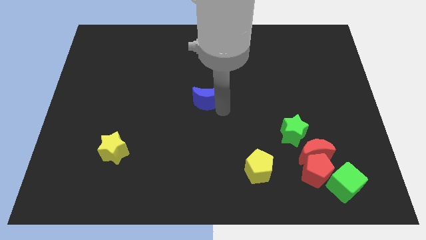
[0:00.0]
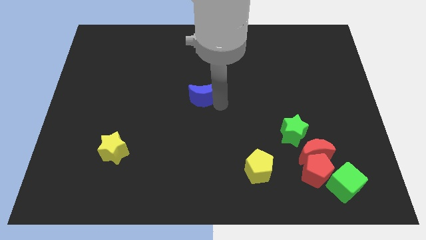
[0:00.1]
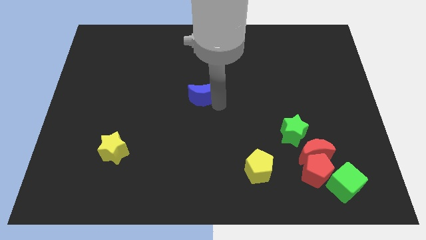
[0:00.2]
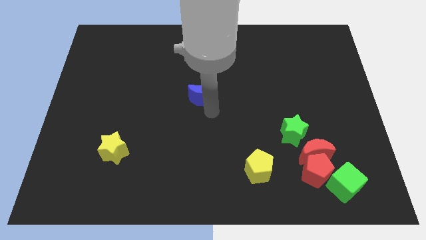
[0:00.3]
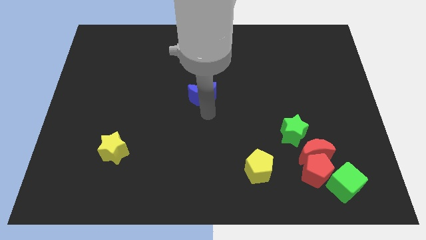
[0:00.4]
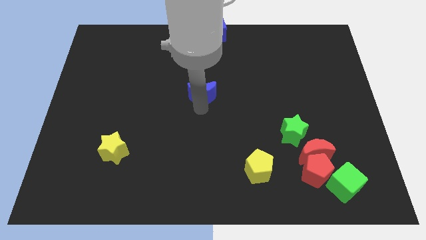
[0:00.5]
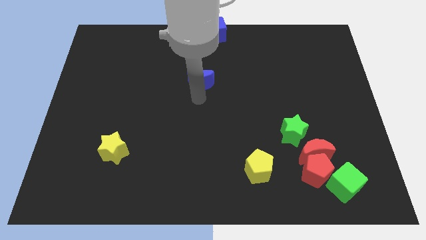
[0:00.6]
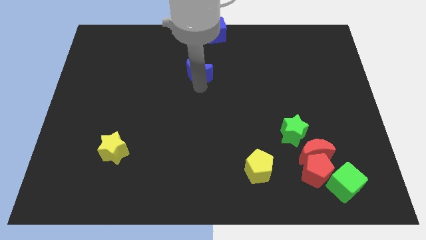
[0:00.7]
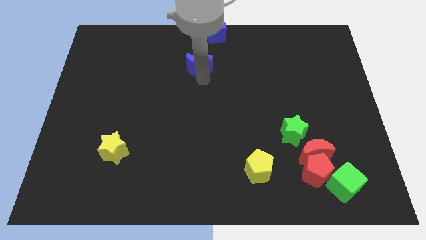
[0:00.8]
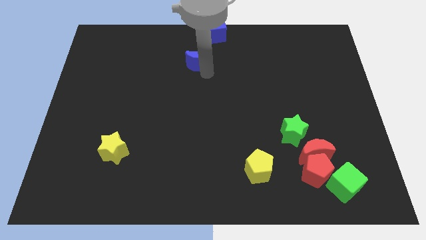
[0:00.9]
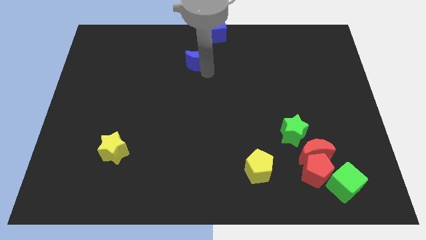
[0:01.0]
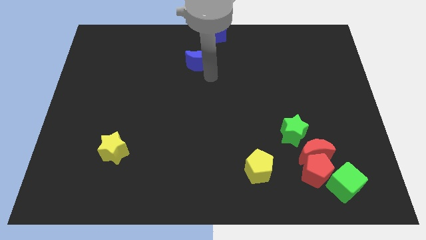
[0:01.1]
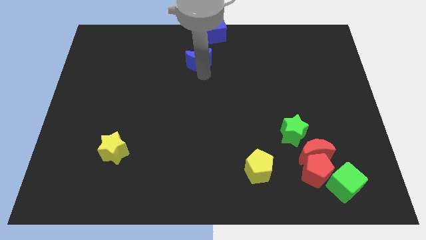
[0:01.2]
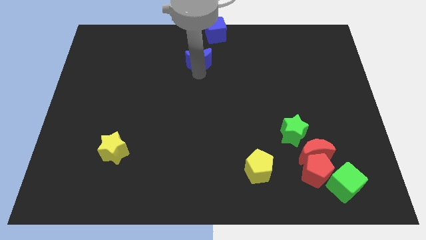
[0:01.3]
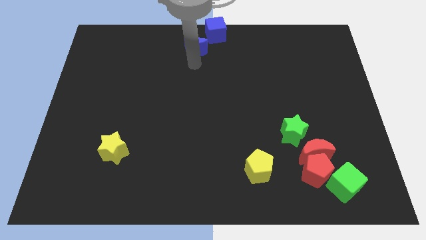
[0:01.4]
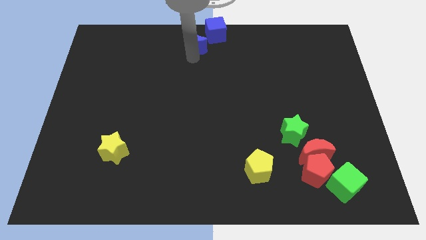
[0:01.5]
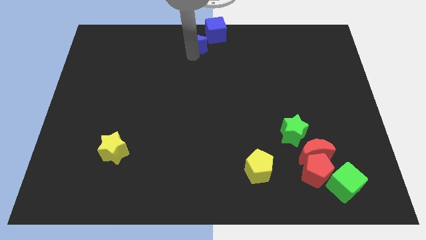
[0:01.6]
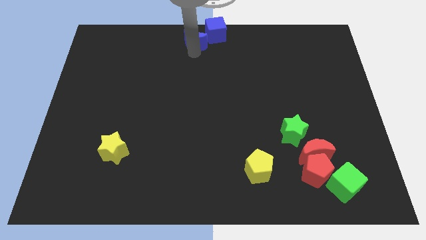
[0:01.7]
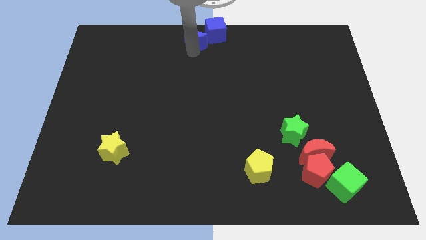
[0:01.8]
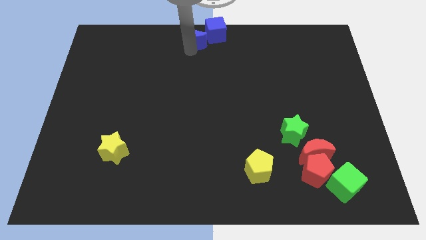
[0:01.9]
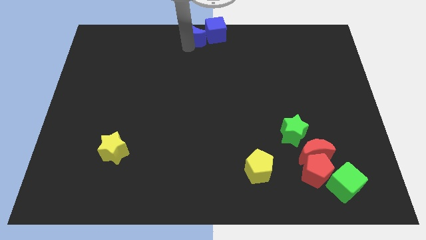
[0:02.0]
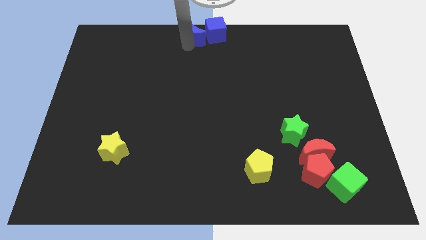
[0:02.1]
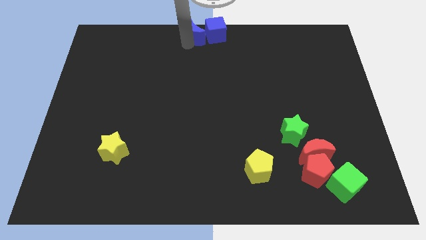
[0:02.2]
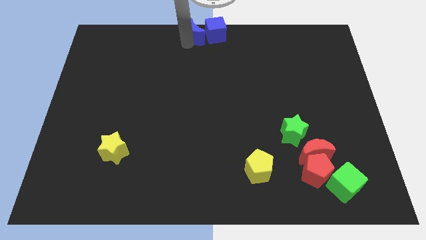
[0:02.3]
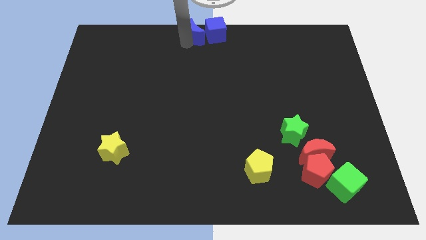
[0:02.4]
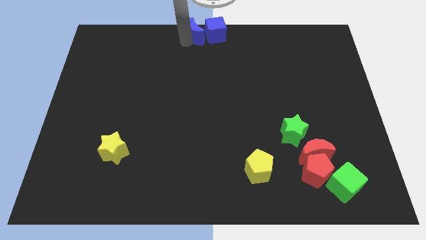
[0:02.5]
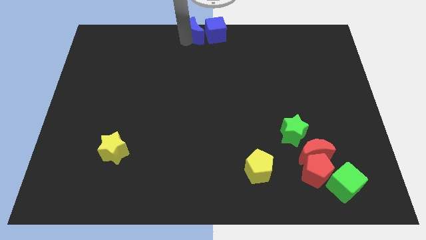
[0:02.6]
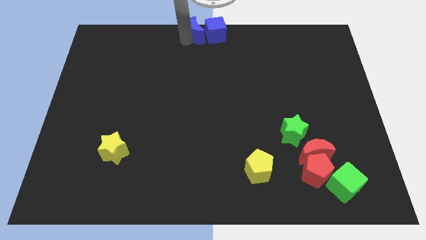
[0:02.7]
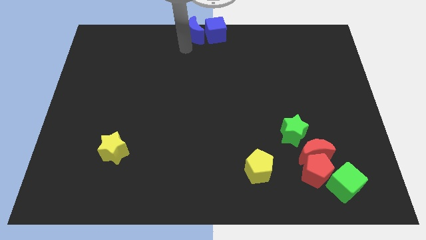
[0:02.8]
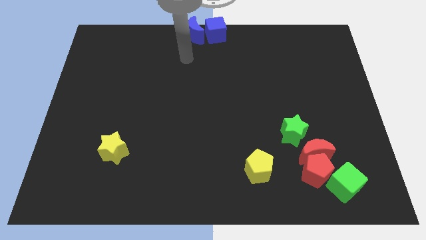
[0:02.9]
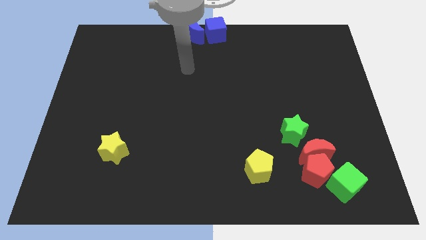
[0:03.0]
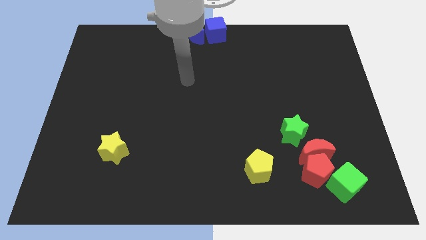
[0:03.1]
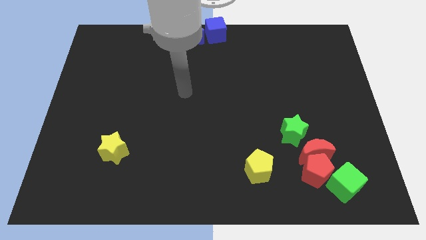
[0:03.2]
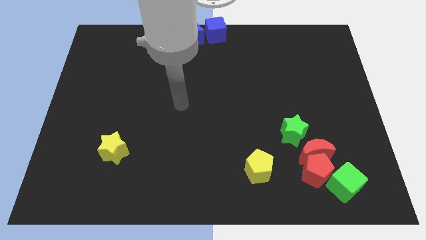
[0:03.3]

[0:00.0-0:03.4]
place the blue moon to the left side of the blue cube

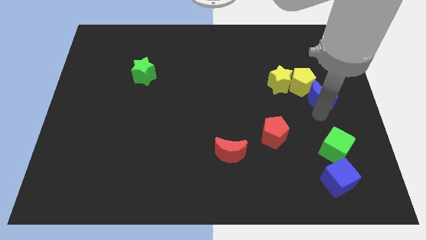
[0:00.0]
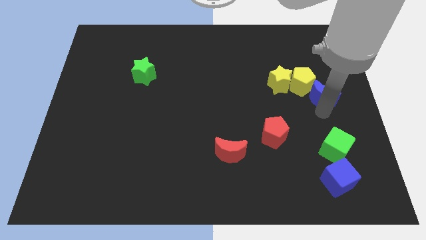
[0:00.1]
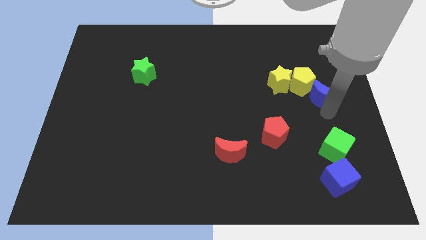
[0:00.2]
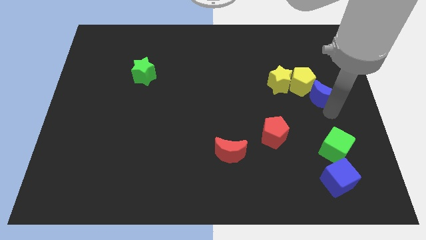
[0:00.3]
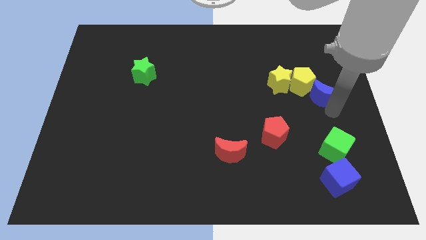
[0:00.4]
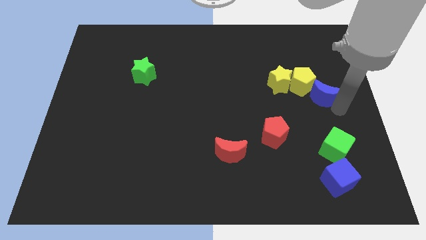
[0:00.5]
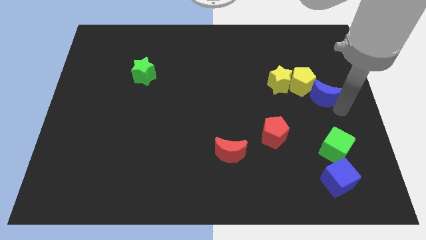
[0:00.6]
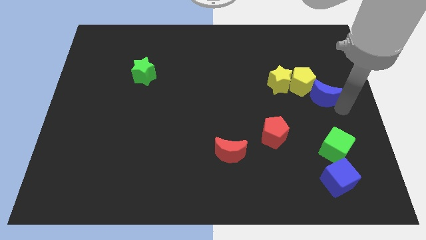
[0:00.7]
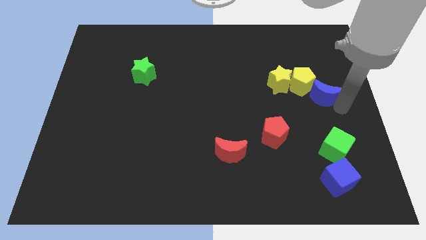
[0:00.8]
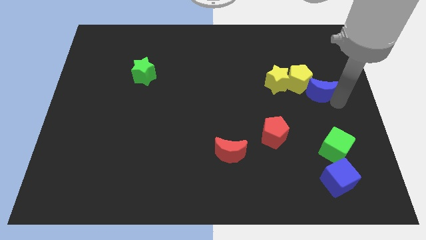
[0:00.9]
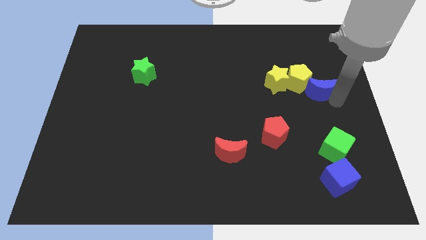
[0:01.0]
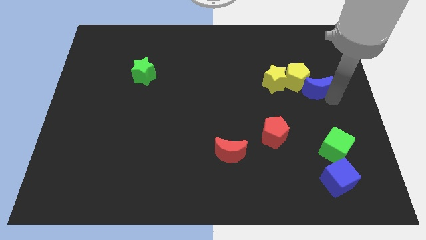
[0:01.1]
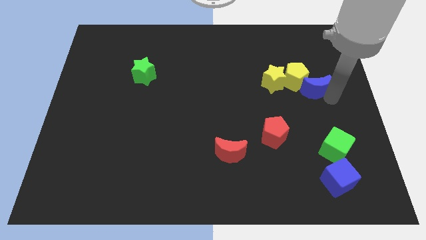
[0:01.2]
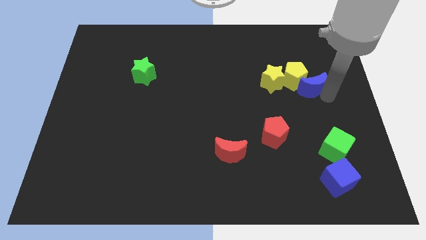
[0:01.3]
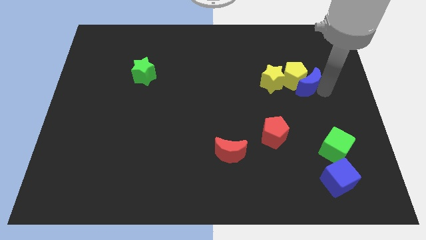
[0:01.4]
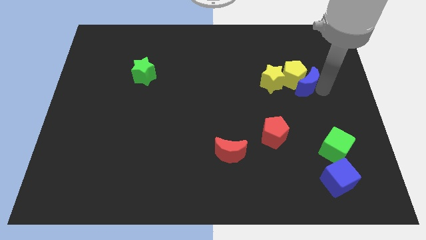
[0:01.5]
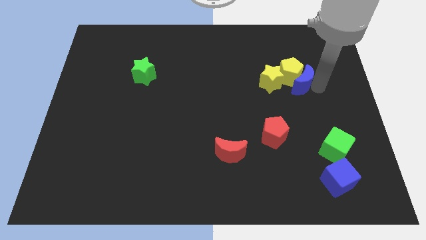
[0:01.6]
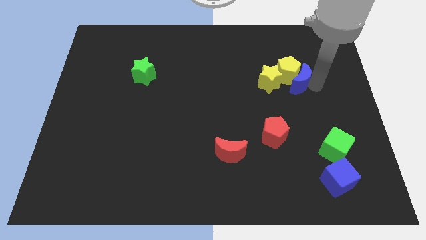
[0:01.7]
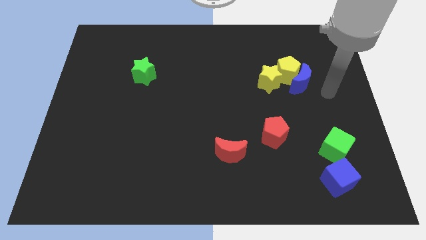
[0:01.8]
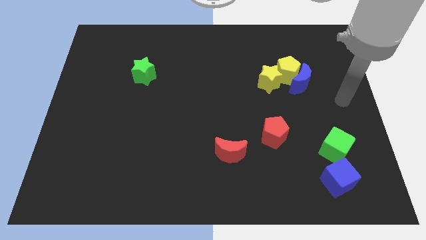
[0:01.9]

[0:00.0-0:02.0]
push the blue crescent into the yellow pentagon

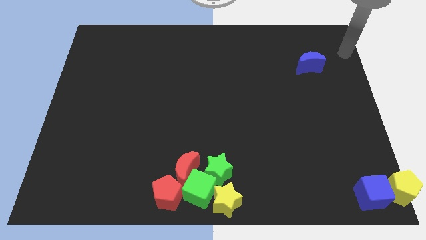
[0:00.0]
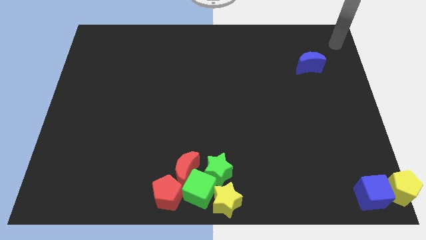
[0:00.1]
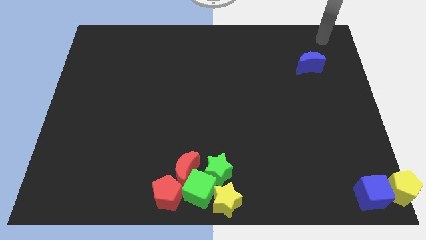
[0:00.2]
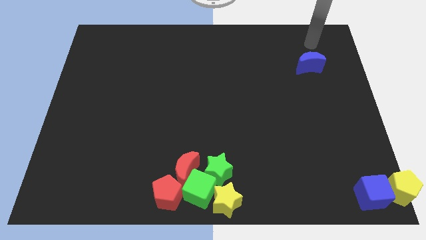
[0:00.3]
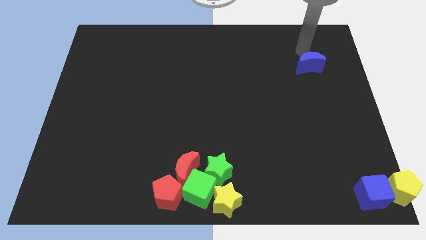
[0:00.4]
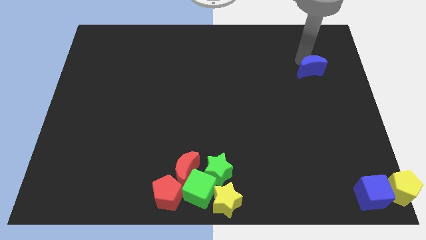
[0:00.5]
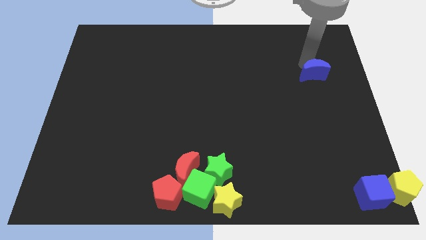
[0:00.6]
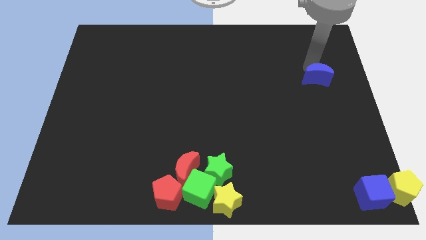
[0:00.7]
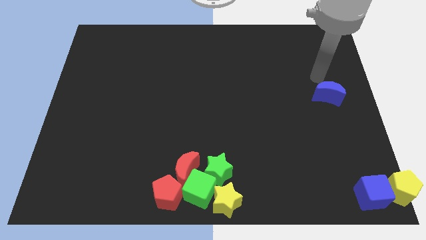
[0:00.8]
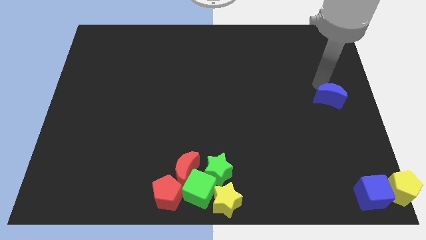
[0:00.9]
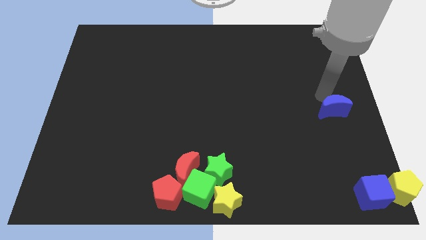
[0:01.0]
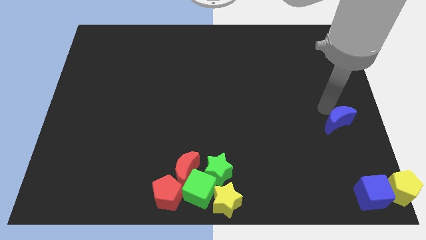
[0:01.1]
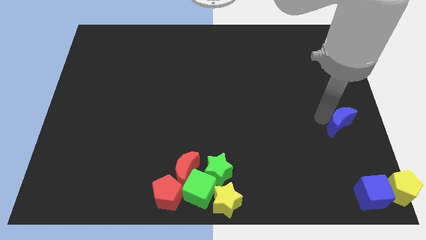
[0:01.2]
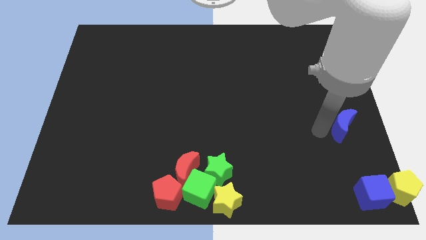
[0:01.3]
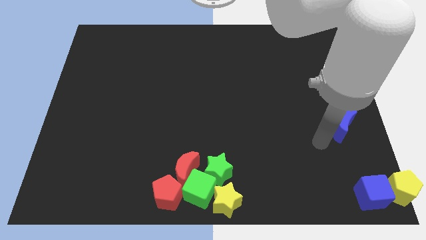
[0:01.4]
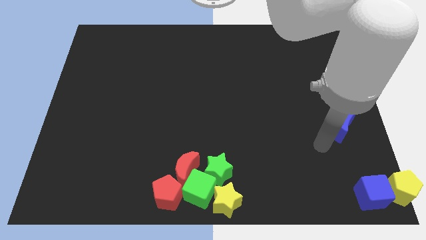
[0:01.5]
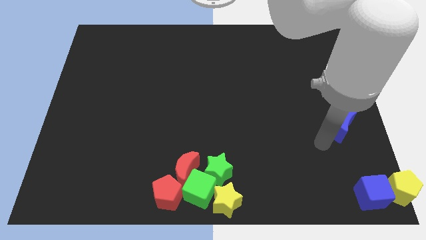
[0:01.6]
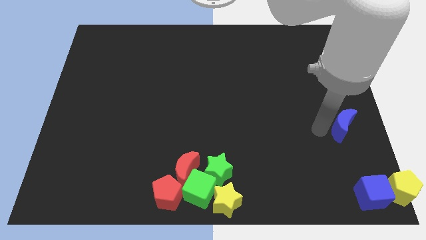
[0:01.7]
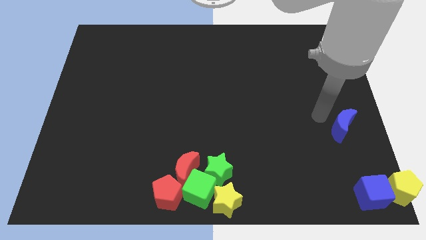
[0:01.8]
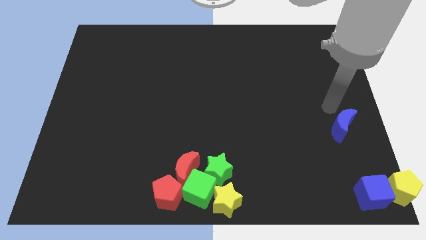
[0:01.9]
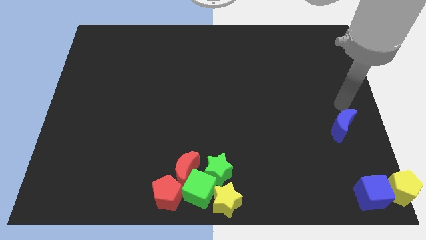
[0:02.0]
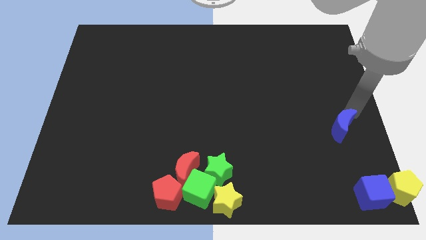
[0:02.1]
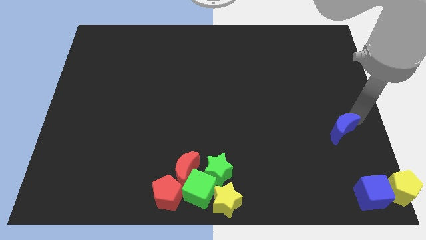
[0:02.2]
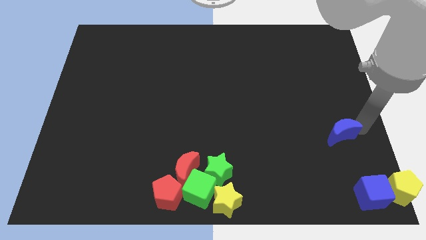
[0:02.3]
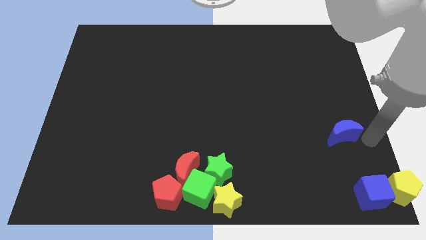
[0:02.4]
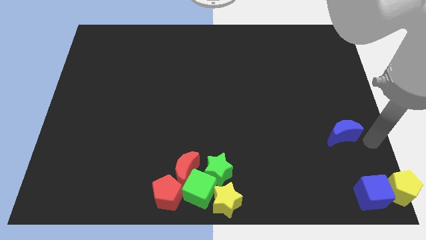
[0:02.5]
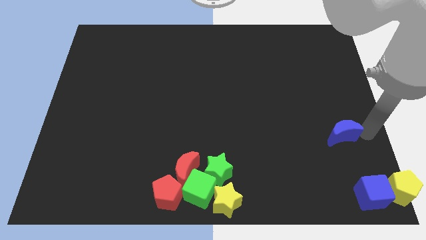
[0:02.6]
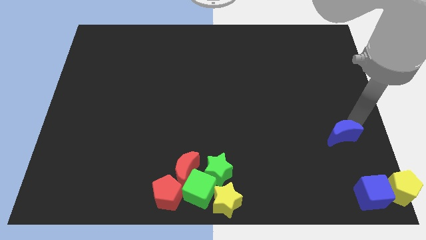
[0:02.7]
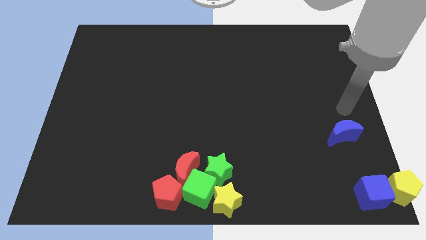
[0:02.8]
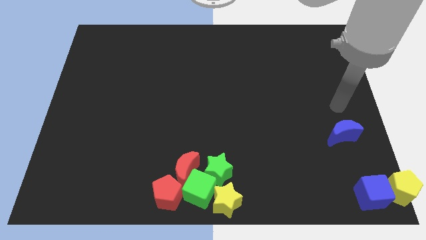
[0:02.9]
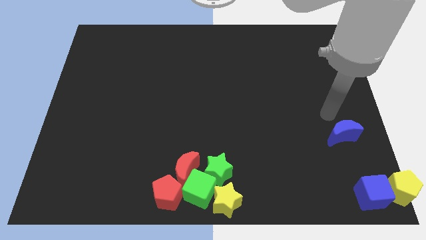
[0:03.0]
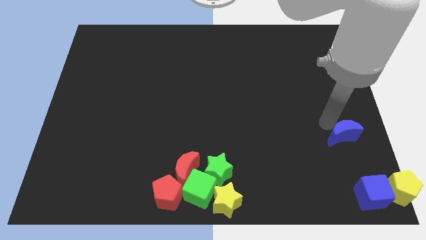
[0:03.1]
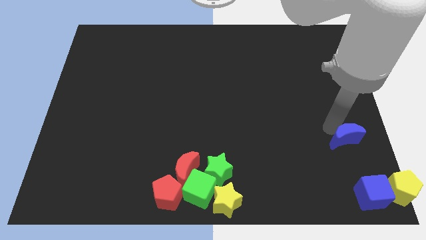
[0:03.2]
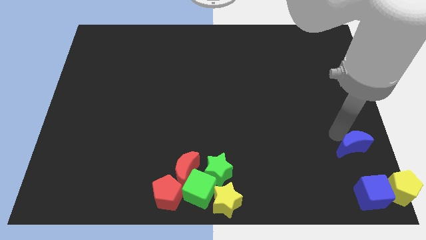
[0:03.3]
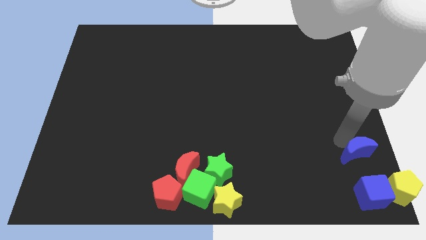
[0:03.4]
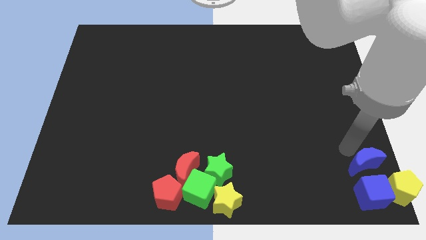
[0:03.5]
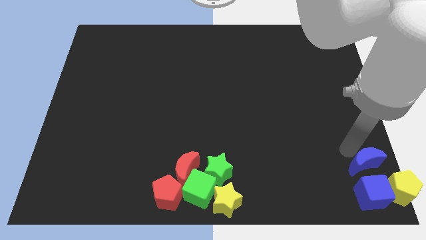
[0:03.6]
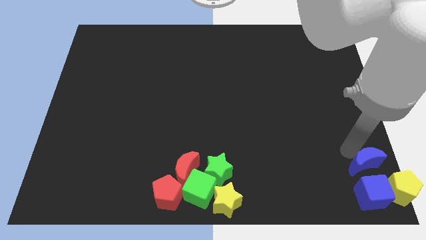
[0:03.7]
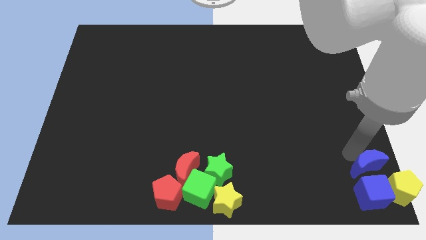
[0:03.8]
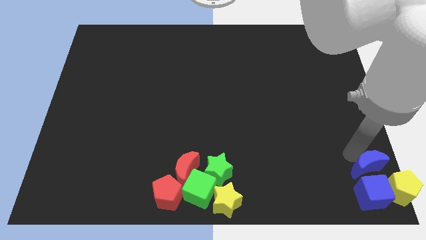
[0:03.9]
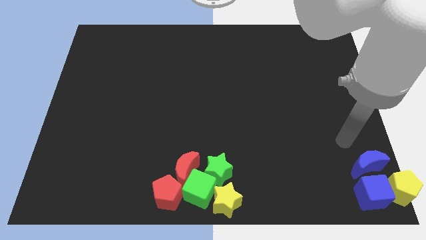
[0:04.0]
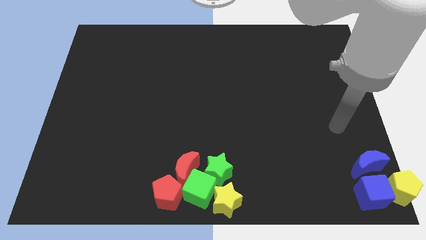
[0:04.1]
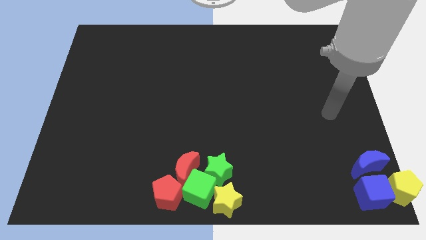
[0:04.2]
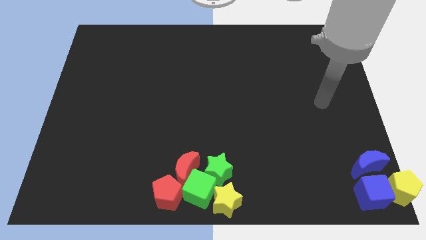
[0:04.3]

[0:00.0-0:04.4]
place the blue crescent to the top of the blue cube
